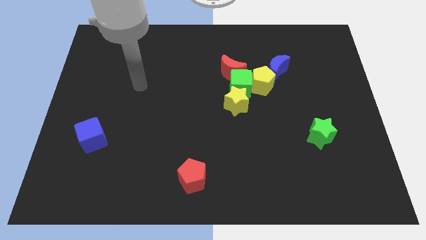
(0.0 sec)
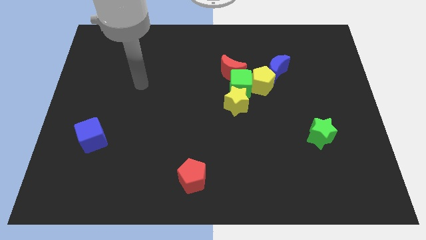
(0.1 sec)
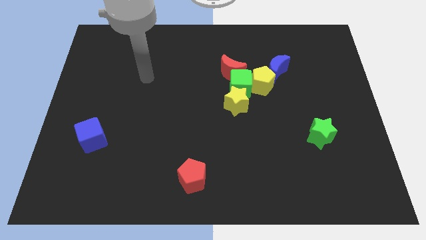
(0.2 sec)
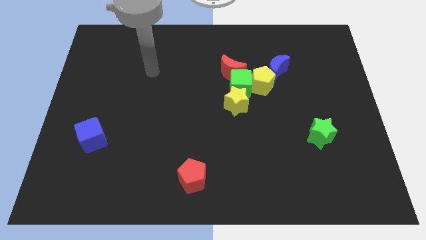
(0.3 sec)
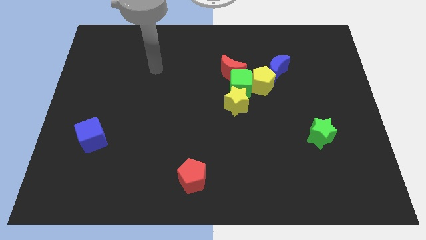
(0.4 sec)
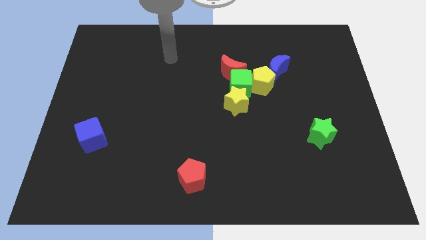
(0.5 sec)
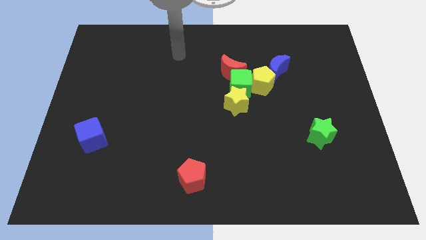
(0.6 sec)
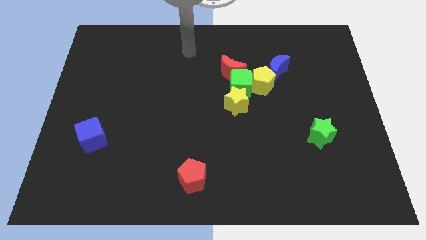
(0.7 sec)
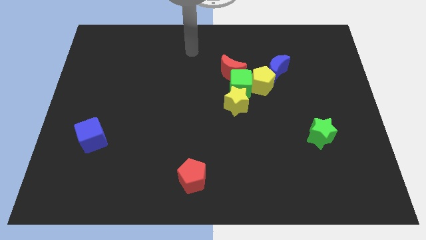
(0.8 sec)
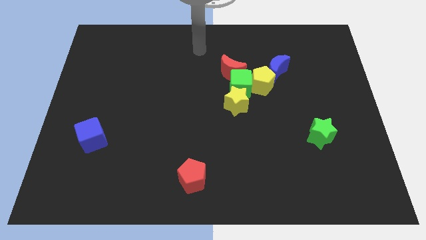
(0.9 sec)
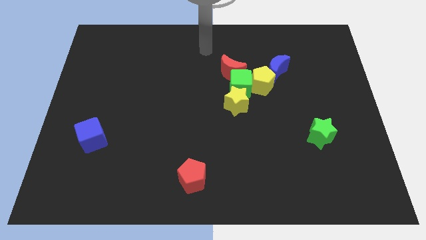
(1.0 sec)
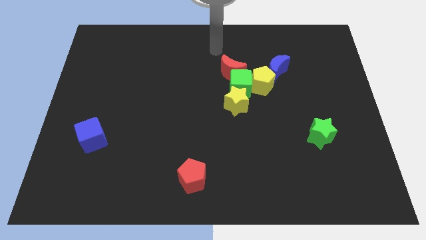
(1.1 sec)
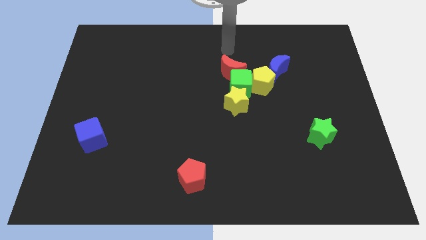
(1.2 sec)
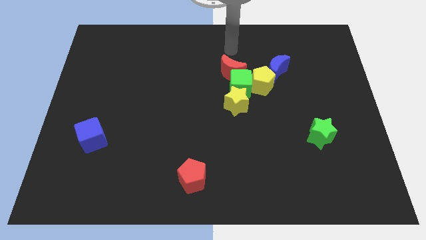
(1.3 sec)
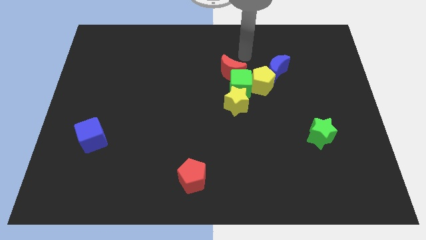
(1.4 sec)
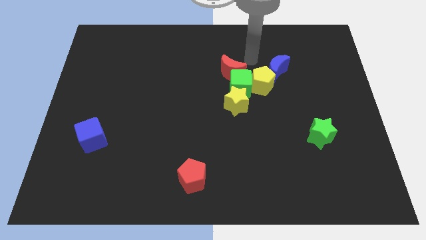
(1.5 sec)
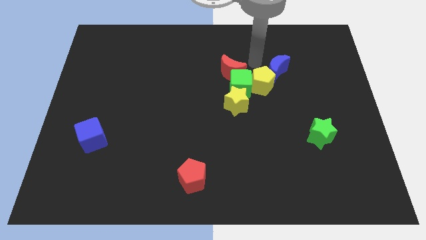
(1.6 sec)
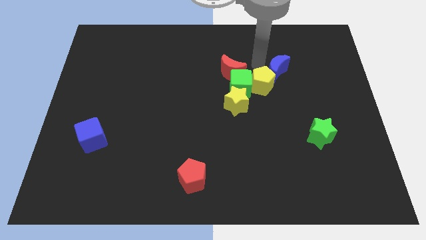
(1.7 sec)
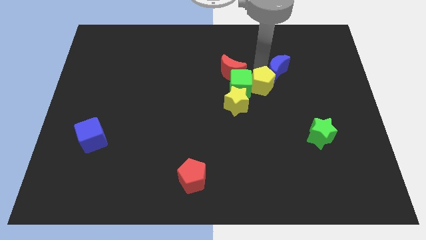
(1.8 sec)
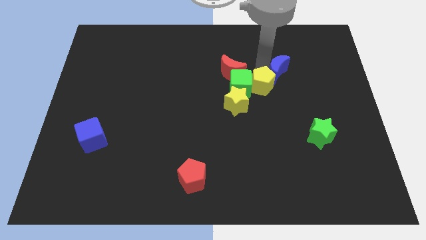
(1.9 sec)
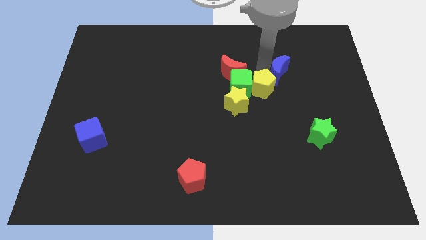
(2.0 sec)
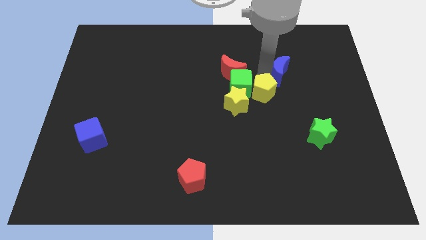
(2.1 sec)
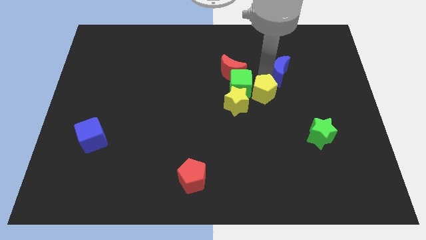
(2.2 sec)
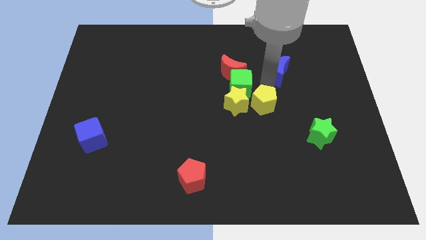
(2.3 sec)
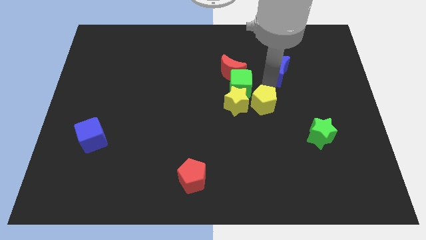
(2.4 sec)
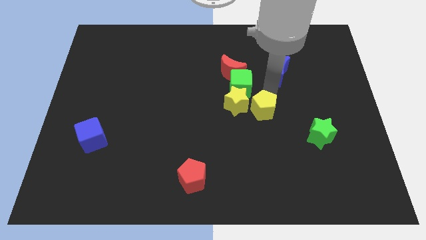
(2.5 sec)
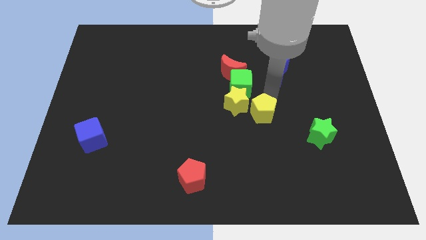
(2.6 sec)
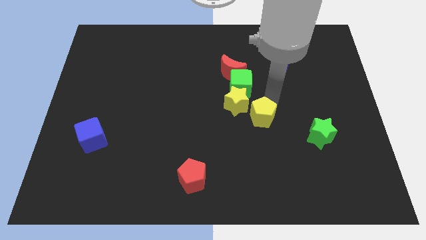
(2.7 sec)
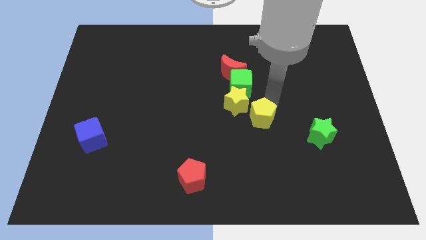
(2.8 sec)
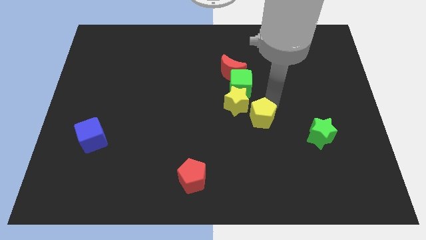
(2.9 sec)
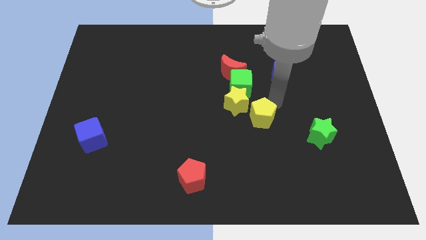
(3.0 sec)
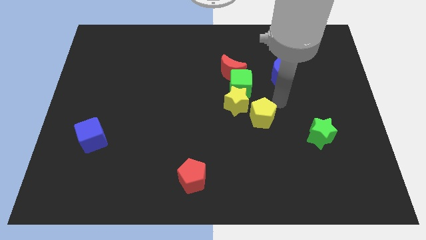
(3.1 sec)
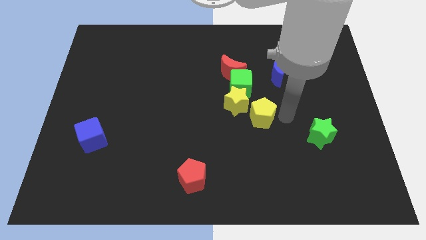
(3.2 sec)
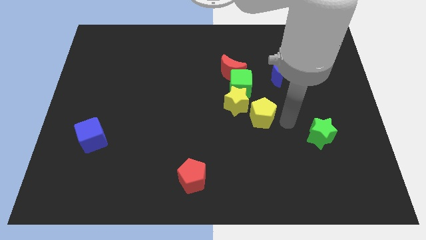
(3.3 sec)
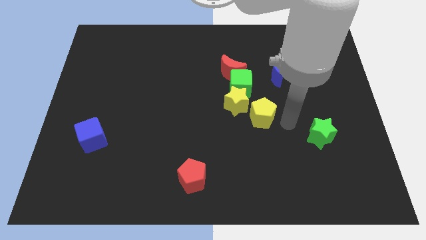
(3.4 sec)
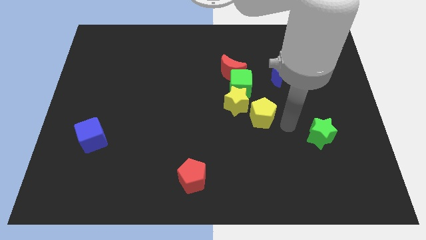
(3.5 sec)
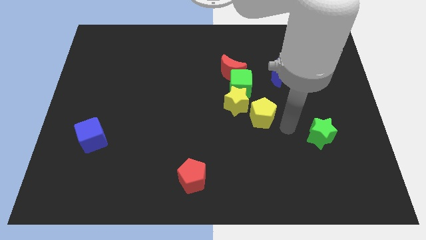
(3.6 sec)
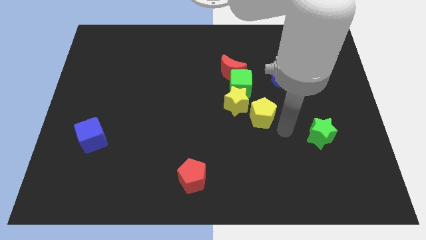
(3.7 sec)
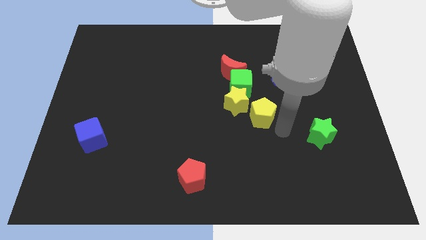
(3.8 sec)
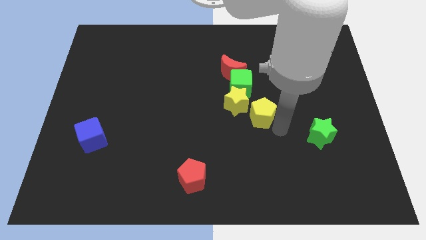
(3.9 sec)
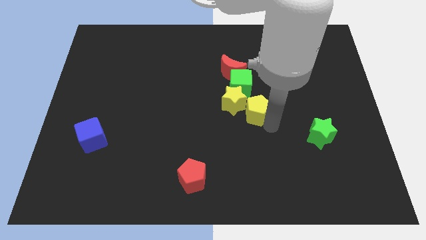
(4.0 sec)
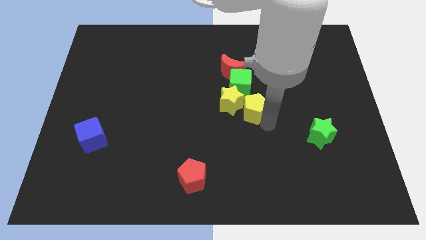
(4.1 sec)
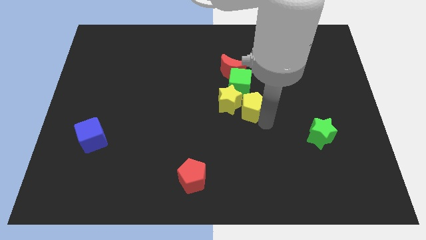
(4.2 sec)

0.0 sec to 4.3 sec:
put the yellow pentagon towards the yellow star

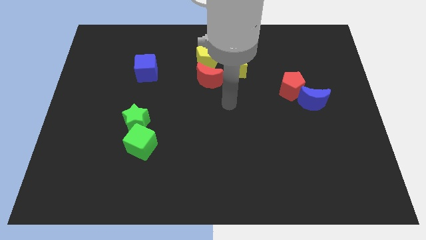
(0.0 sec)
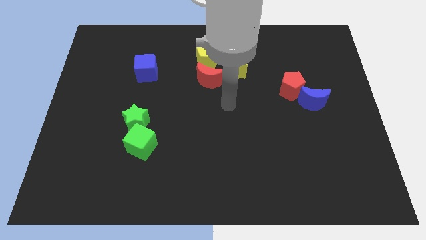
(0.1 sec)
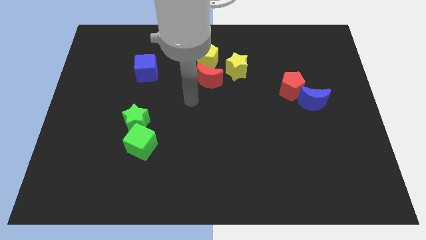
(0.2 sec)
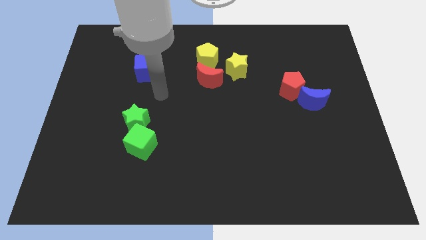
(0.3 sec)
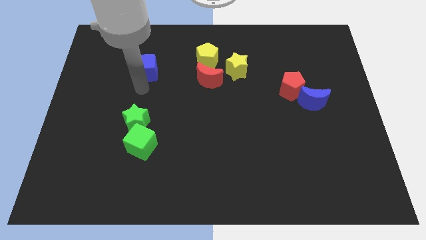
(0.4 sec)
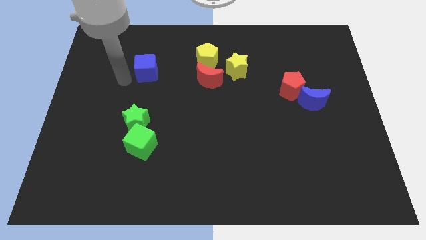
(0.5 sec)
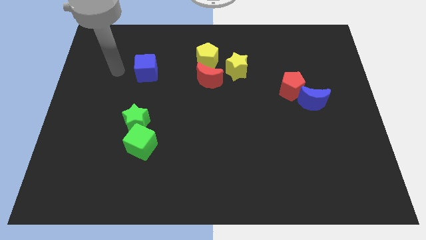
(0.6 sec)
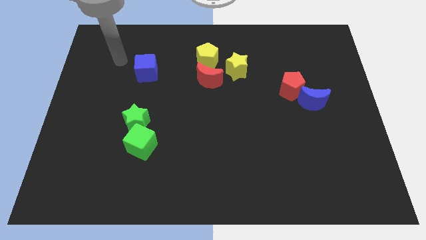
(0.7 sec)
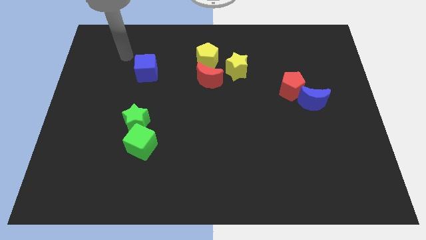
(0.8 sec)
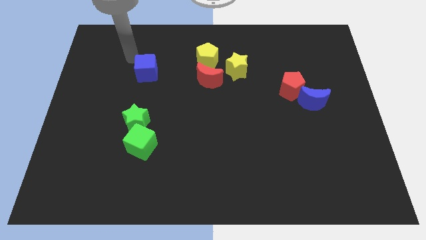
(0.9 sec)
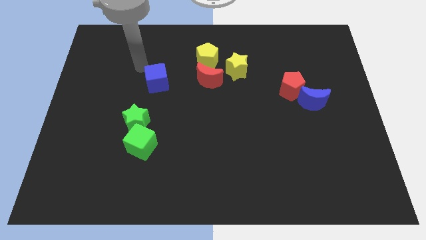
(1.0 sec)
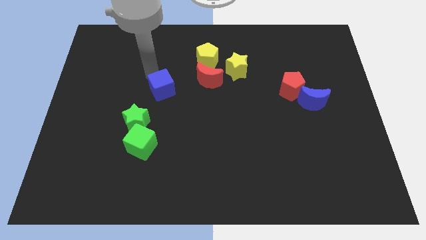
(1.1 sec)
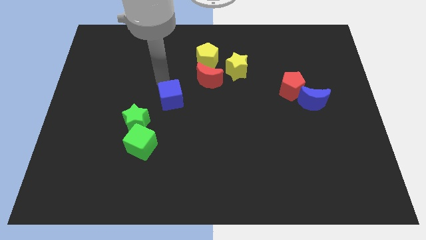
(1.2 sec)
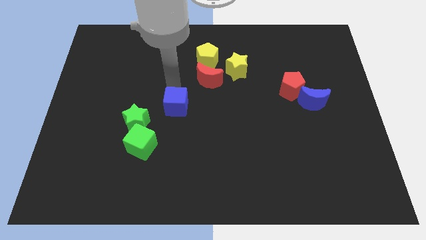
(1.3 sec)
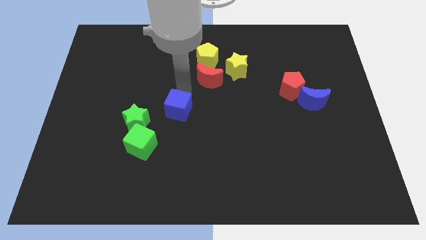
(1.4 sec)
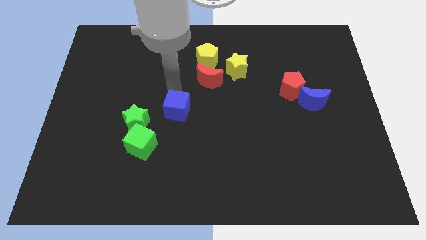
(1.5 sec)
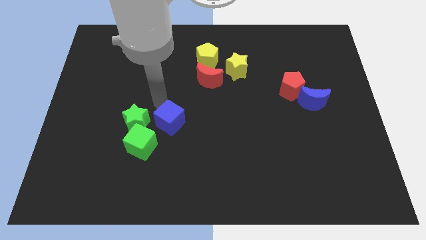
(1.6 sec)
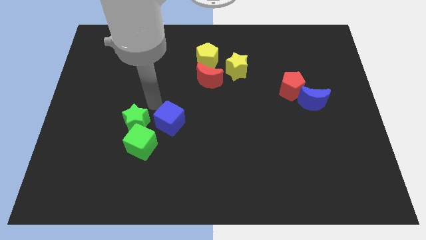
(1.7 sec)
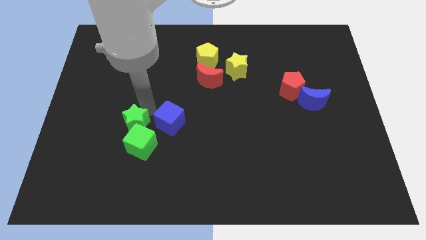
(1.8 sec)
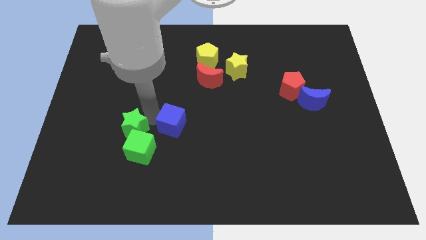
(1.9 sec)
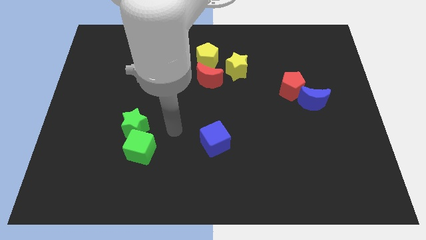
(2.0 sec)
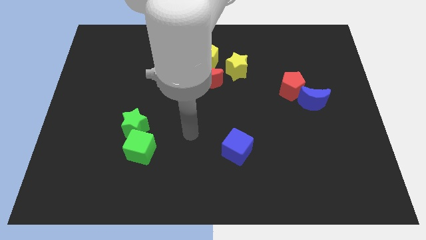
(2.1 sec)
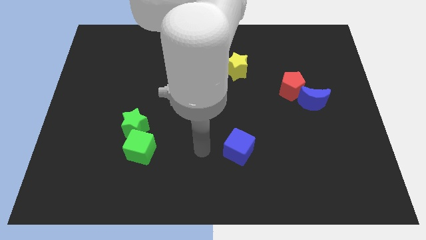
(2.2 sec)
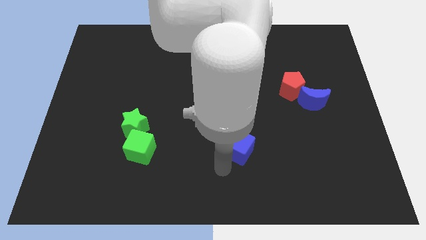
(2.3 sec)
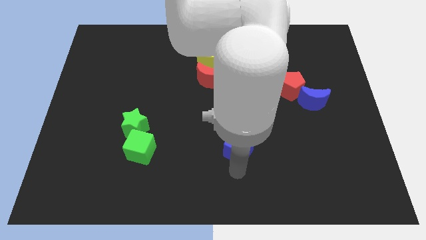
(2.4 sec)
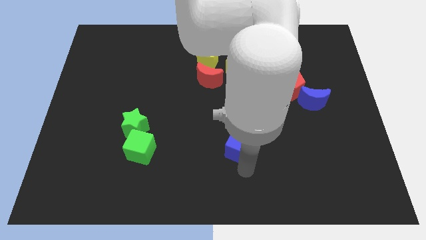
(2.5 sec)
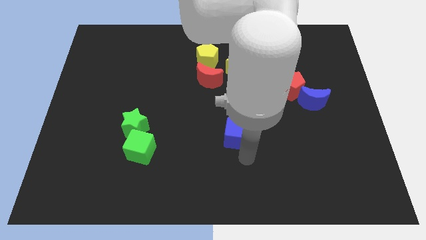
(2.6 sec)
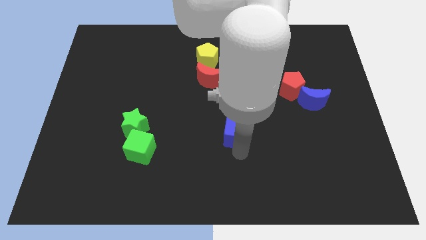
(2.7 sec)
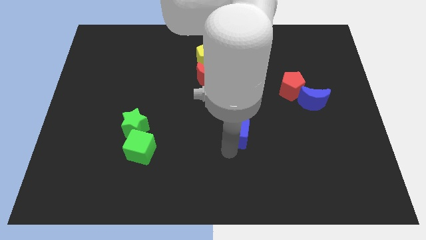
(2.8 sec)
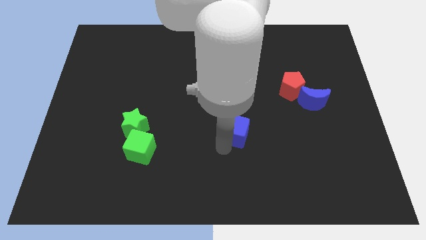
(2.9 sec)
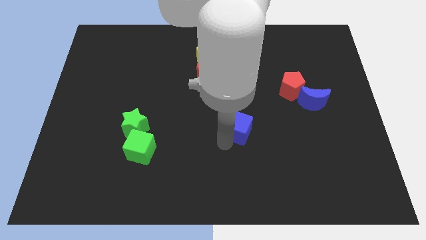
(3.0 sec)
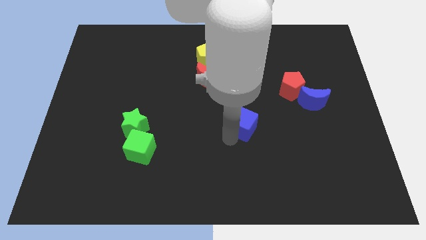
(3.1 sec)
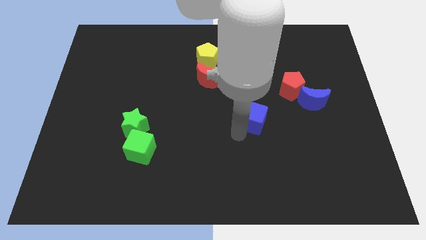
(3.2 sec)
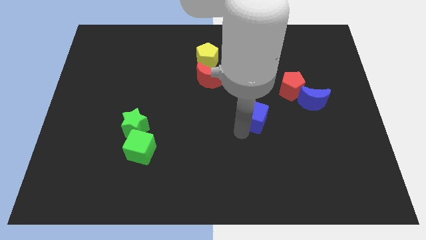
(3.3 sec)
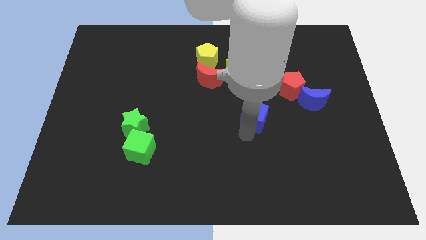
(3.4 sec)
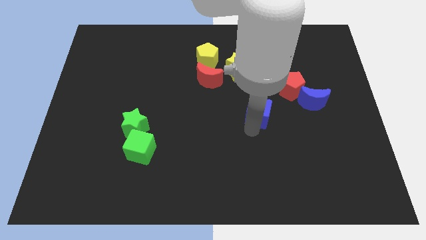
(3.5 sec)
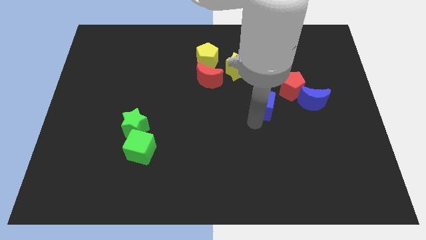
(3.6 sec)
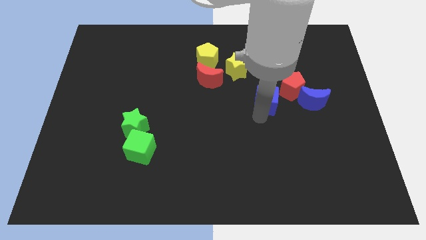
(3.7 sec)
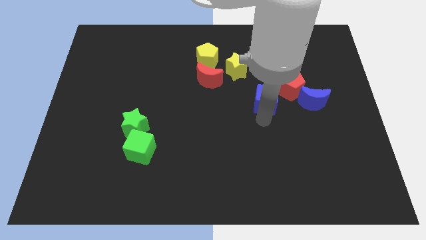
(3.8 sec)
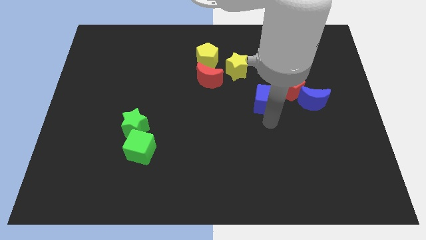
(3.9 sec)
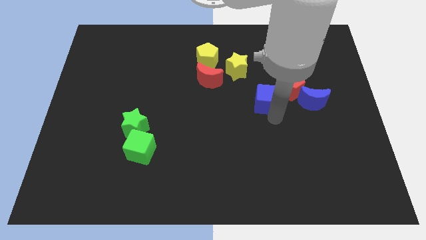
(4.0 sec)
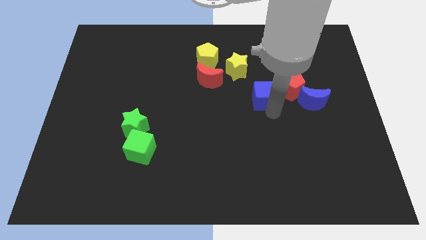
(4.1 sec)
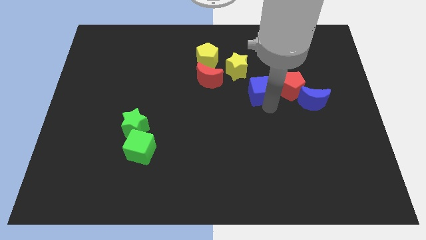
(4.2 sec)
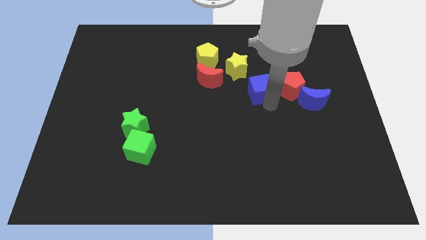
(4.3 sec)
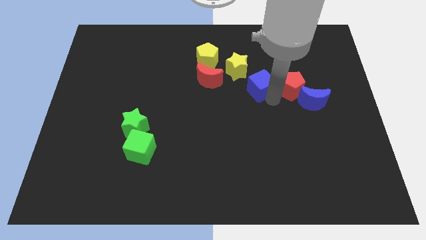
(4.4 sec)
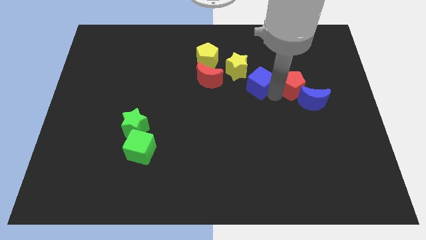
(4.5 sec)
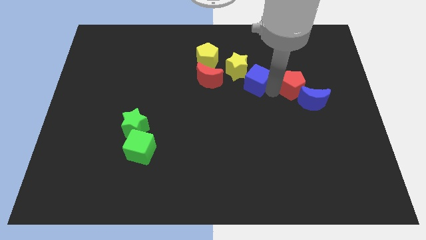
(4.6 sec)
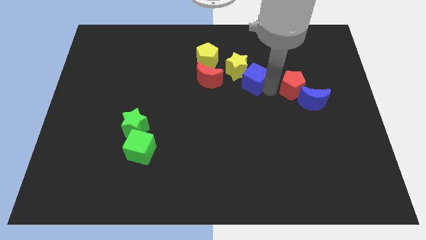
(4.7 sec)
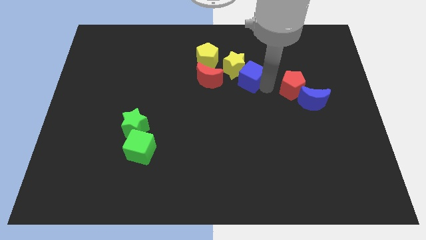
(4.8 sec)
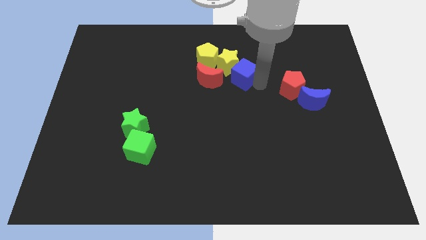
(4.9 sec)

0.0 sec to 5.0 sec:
slide the blue cube to the yellow star
